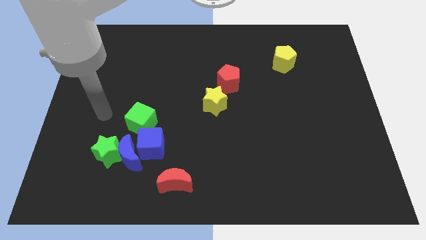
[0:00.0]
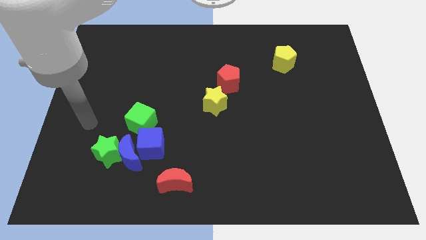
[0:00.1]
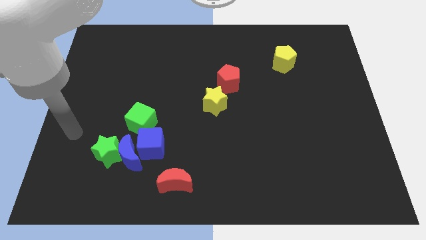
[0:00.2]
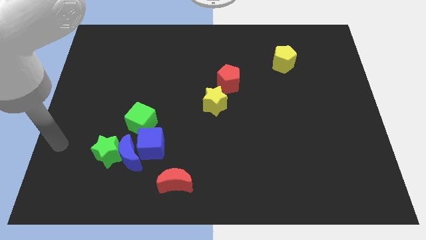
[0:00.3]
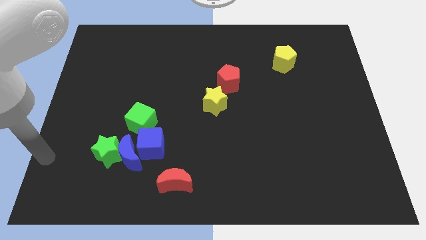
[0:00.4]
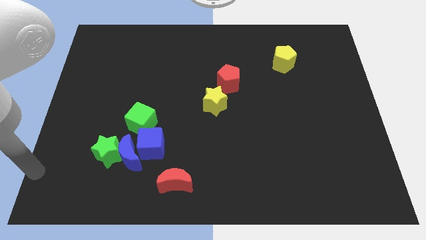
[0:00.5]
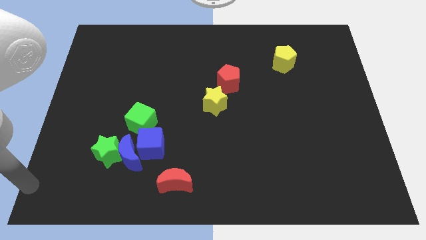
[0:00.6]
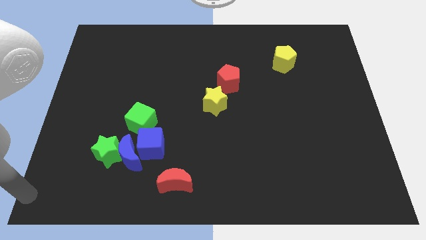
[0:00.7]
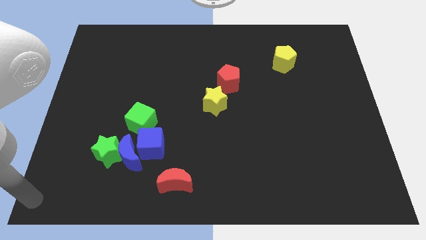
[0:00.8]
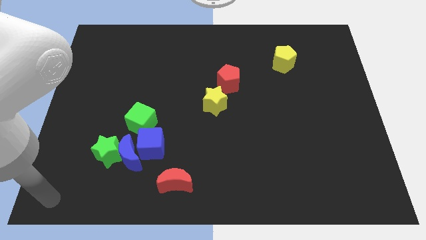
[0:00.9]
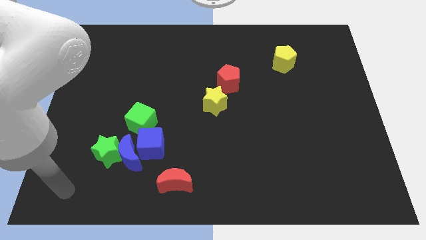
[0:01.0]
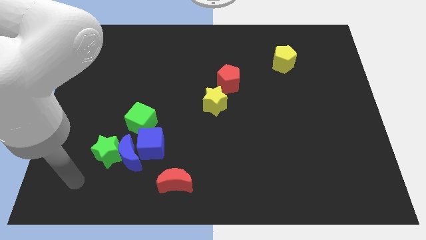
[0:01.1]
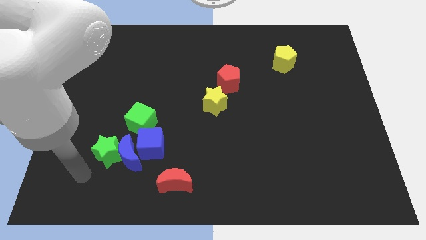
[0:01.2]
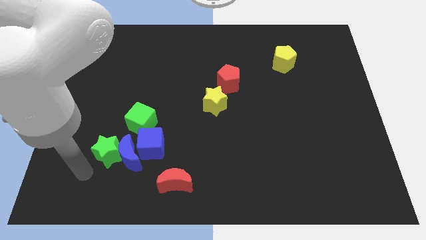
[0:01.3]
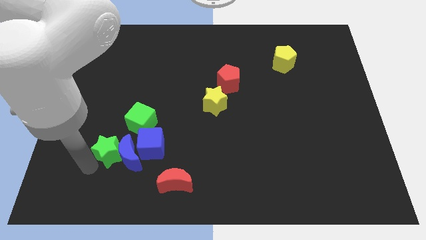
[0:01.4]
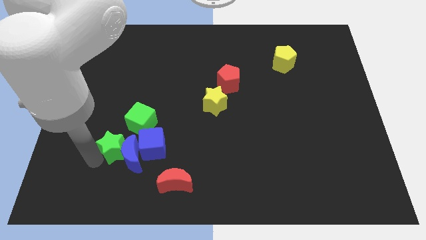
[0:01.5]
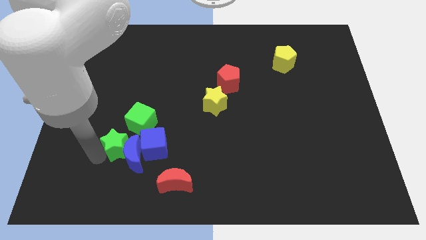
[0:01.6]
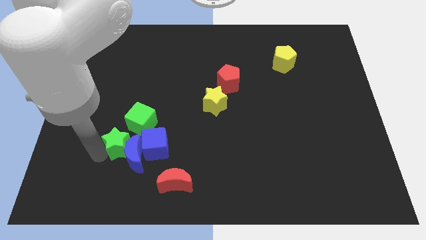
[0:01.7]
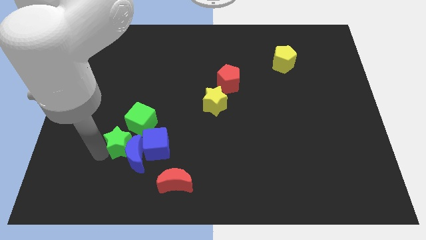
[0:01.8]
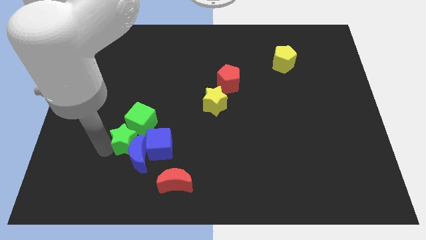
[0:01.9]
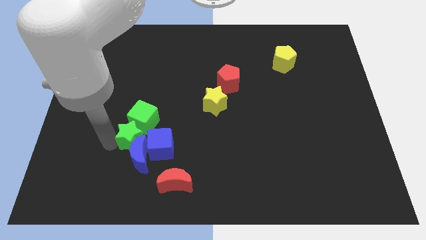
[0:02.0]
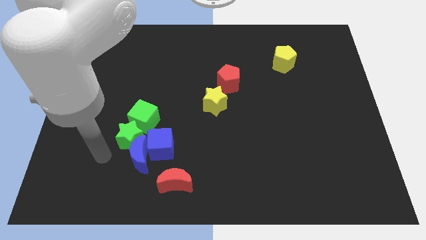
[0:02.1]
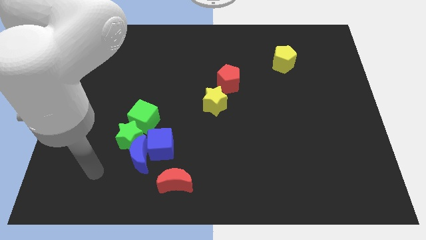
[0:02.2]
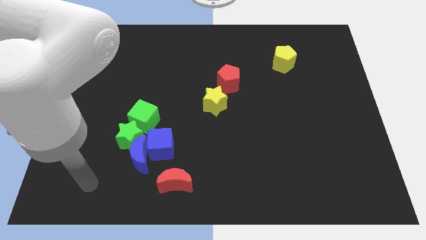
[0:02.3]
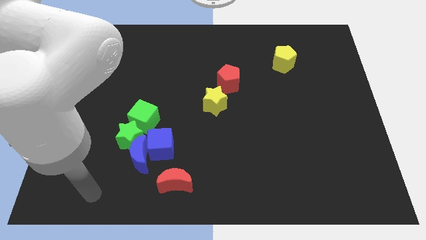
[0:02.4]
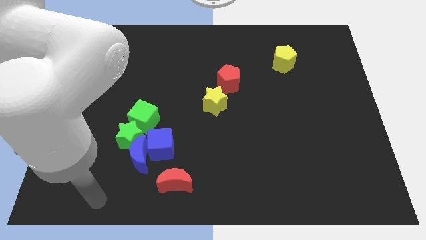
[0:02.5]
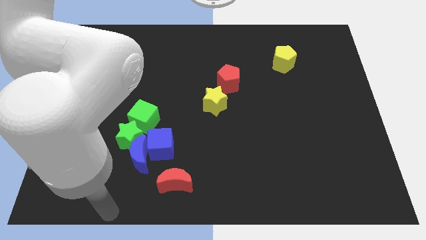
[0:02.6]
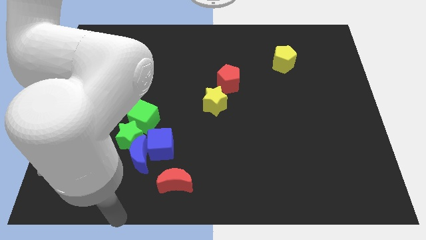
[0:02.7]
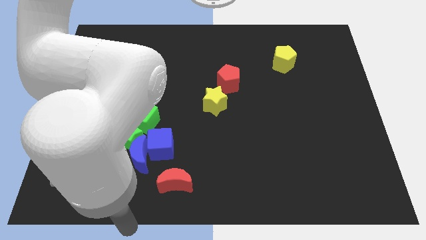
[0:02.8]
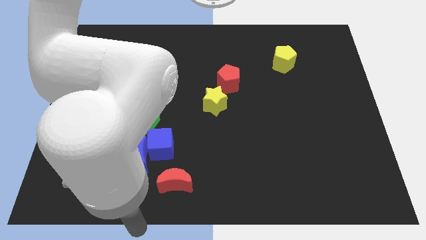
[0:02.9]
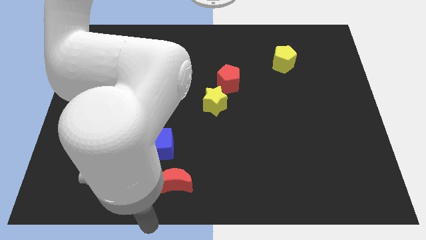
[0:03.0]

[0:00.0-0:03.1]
move green star into green cube

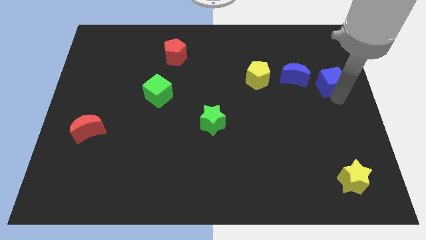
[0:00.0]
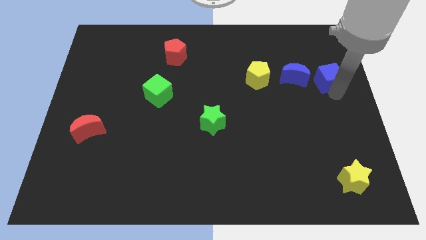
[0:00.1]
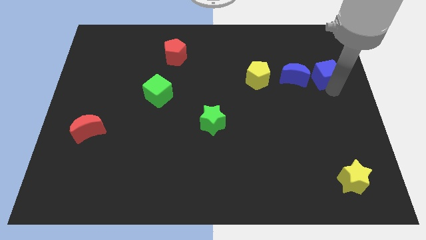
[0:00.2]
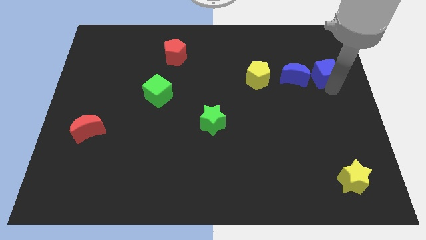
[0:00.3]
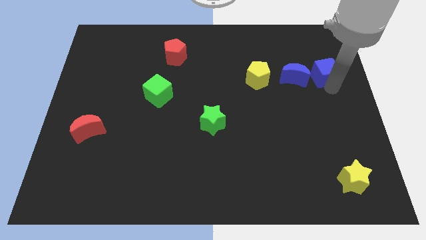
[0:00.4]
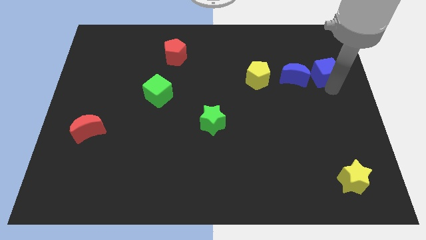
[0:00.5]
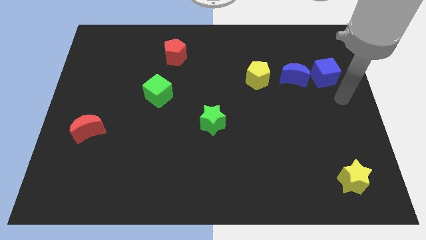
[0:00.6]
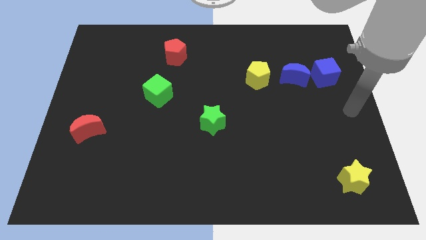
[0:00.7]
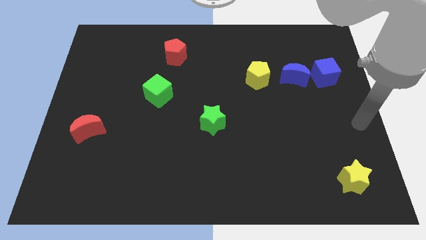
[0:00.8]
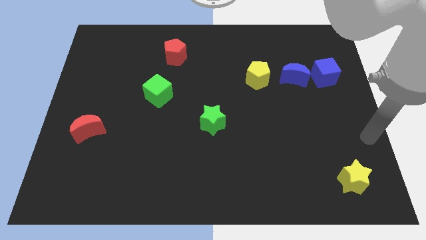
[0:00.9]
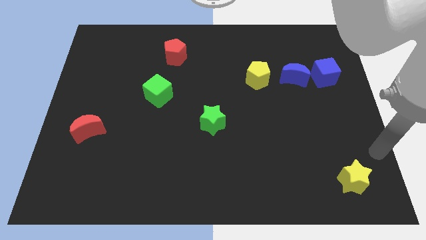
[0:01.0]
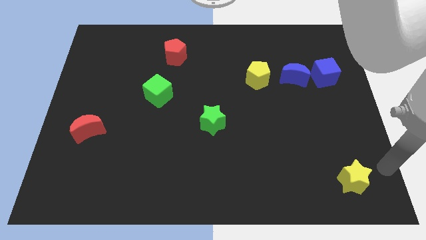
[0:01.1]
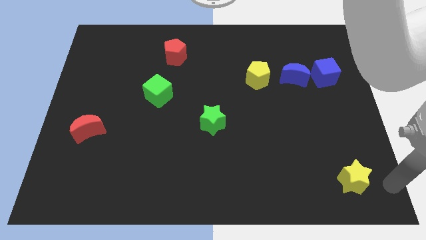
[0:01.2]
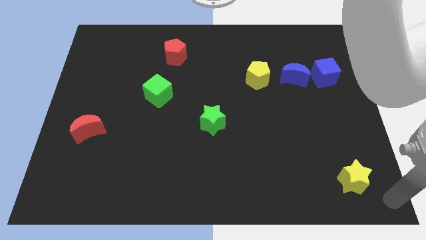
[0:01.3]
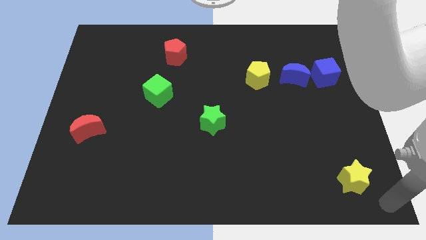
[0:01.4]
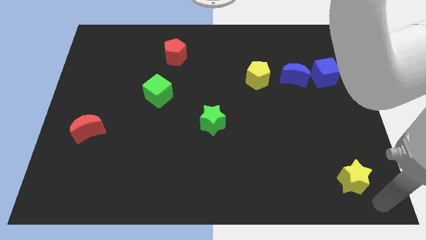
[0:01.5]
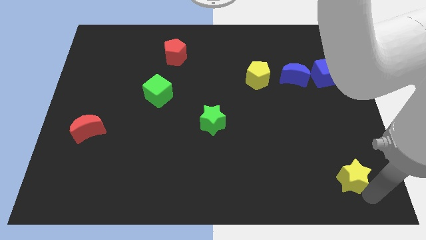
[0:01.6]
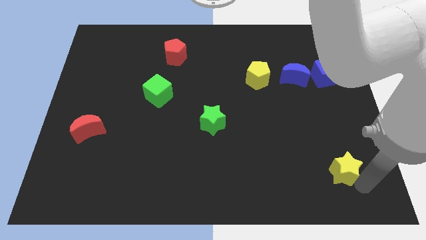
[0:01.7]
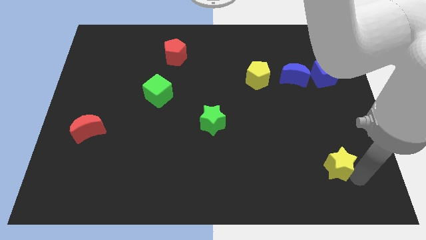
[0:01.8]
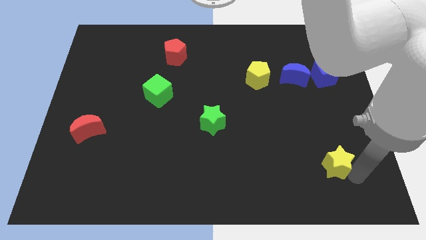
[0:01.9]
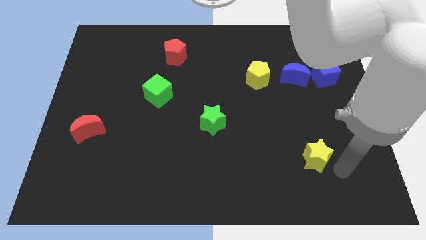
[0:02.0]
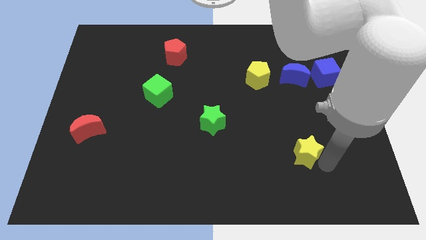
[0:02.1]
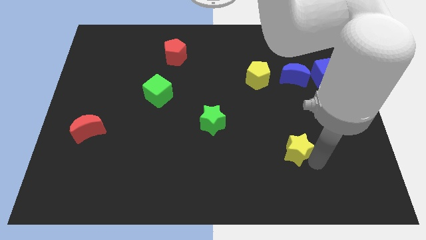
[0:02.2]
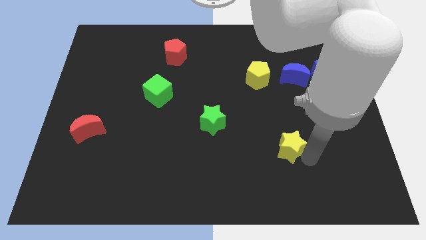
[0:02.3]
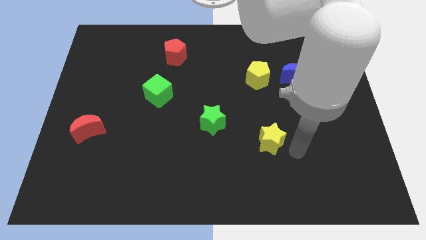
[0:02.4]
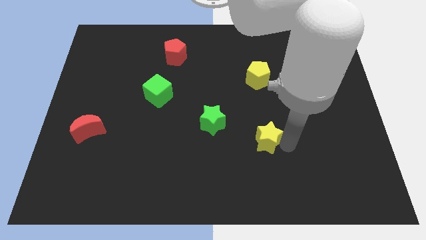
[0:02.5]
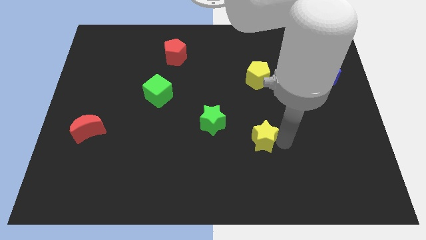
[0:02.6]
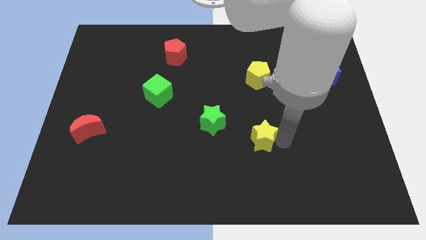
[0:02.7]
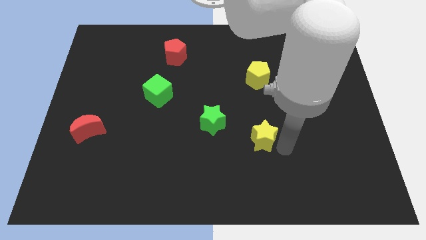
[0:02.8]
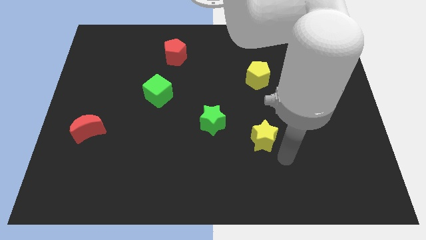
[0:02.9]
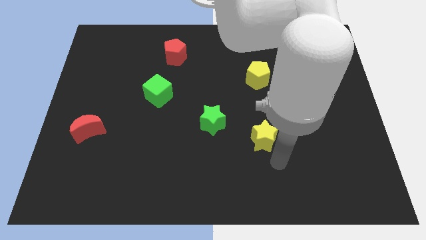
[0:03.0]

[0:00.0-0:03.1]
push yellow star towards green star

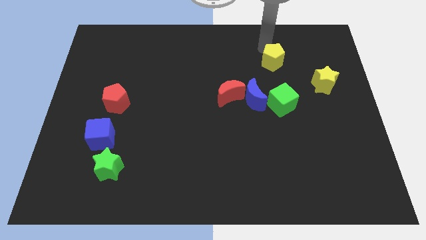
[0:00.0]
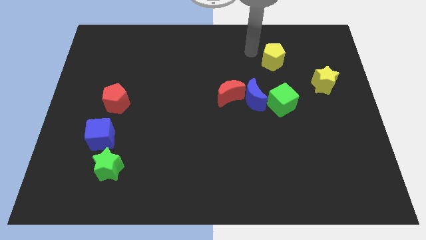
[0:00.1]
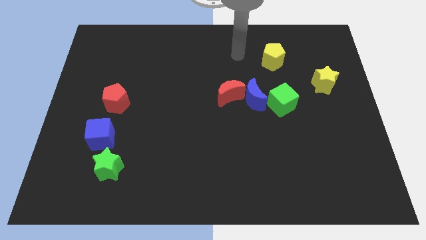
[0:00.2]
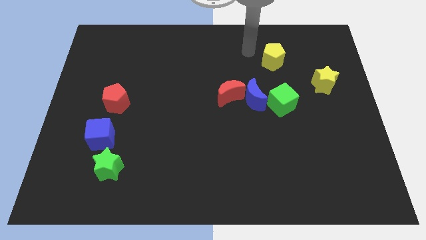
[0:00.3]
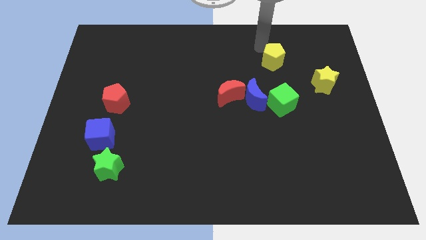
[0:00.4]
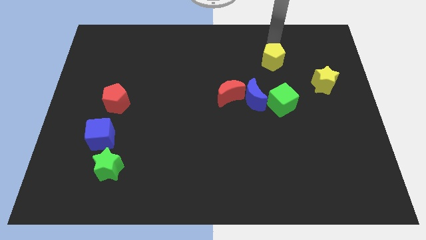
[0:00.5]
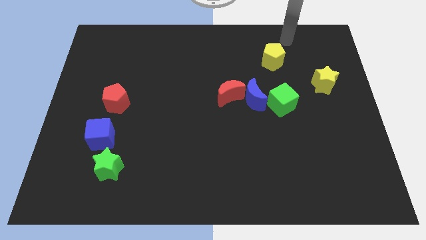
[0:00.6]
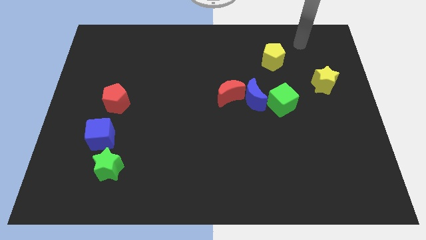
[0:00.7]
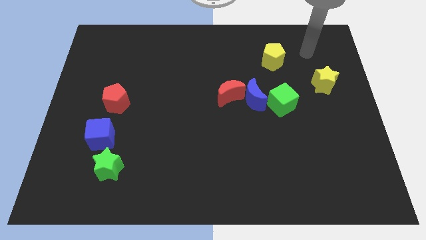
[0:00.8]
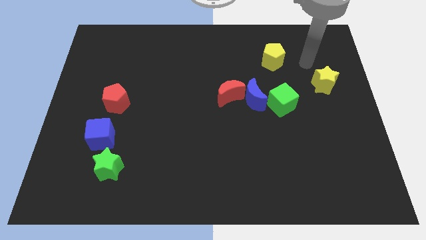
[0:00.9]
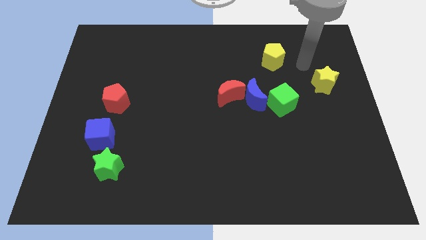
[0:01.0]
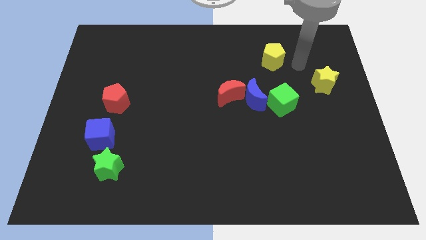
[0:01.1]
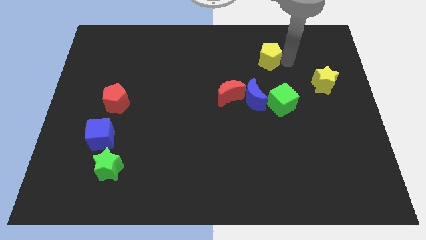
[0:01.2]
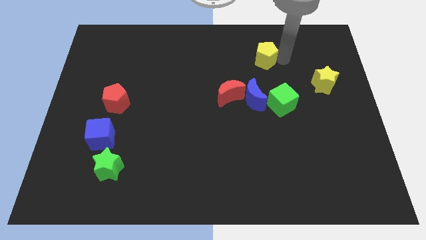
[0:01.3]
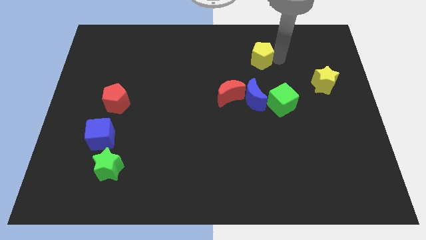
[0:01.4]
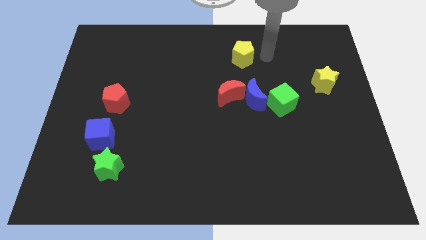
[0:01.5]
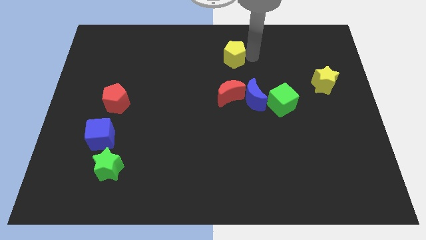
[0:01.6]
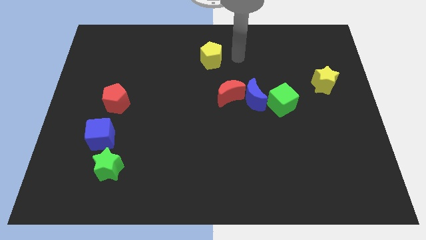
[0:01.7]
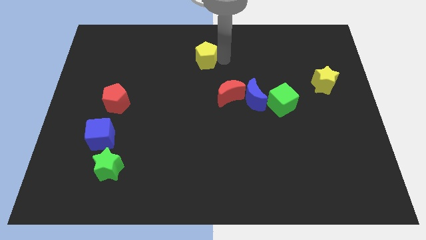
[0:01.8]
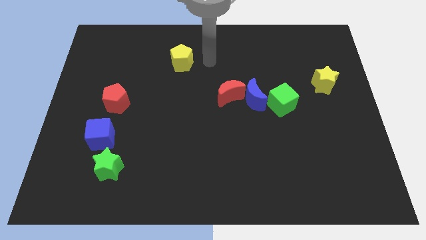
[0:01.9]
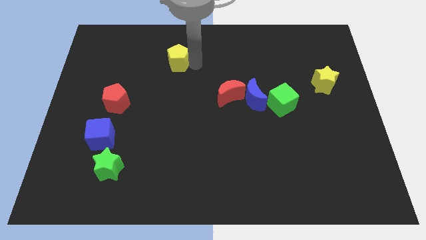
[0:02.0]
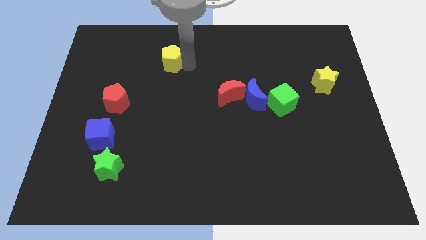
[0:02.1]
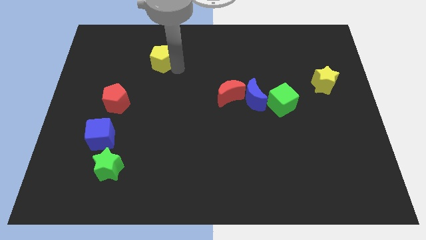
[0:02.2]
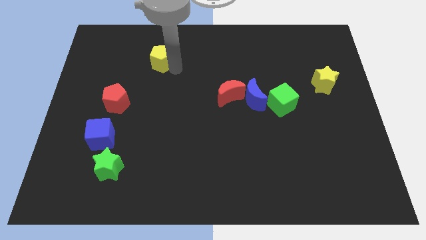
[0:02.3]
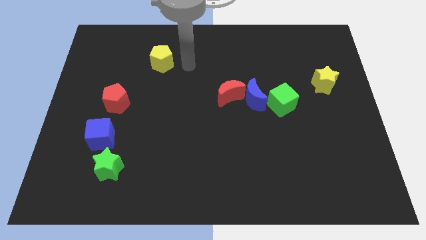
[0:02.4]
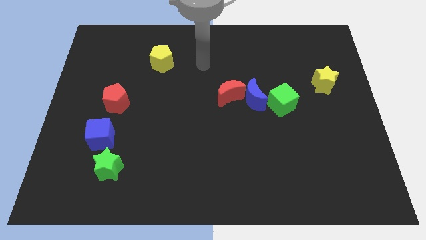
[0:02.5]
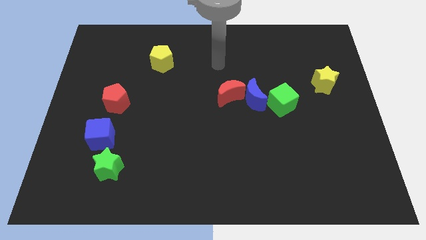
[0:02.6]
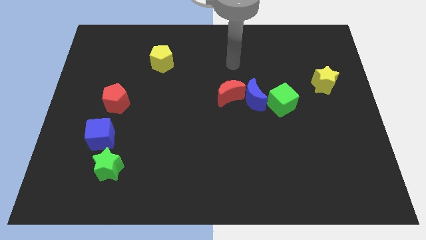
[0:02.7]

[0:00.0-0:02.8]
move yellow pentagon slightly left
